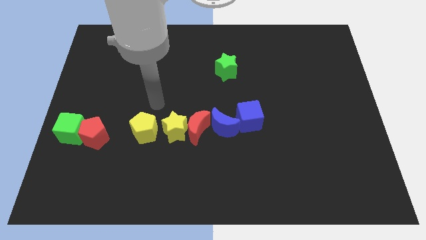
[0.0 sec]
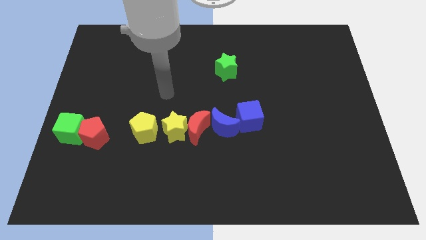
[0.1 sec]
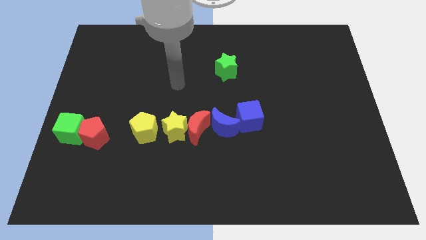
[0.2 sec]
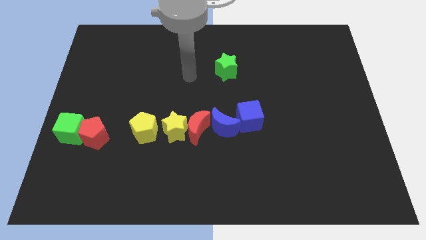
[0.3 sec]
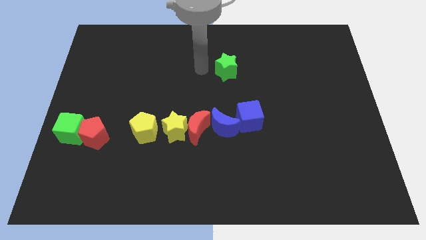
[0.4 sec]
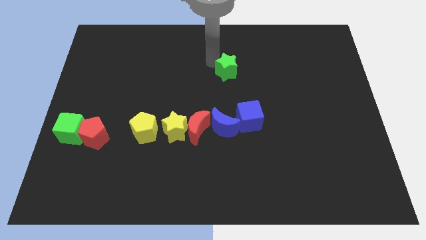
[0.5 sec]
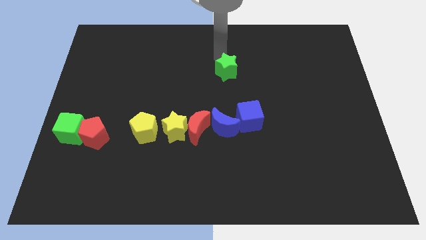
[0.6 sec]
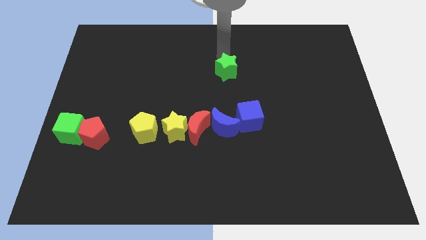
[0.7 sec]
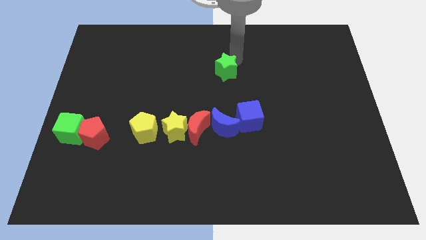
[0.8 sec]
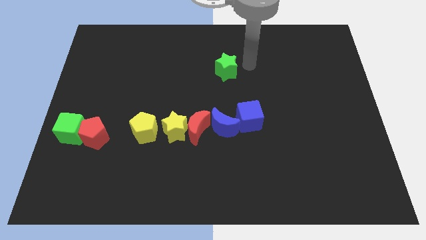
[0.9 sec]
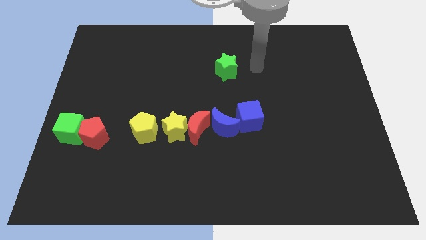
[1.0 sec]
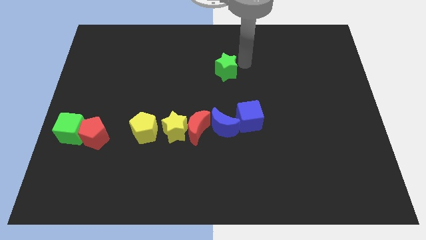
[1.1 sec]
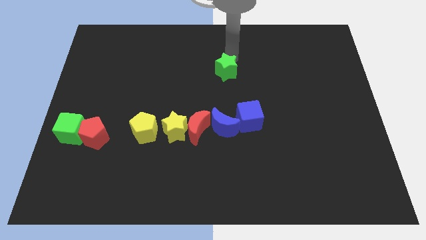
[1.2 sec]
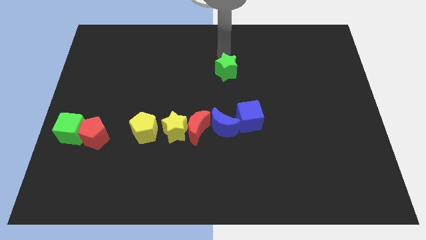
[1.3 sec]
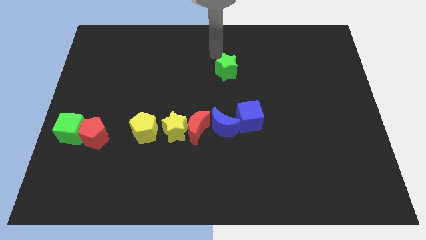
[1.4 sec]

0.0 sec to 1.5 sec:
move your arm above the green star

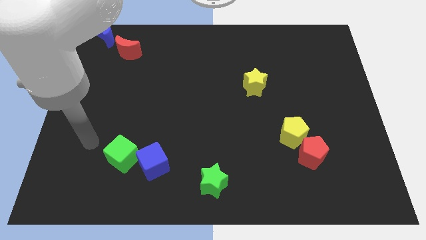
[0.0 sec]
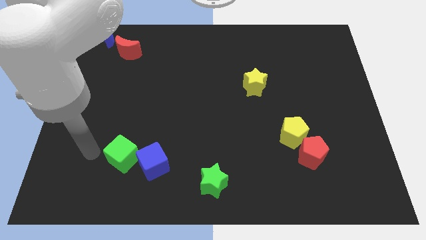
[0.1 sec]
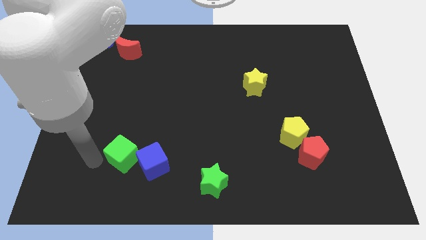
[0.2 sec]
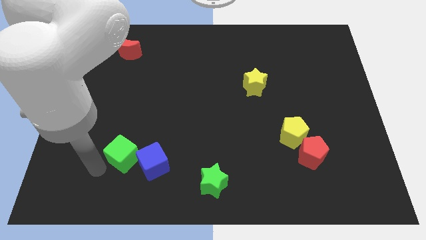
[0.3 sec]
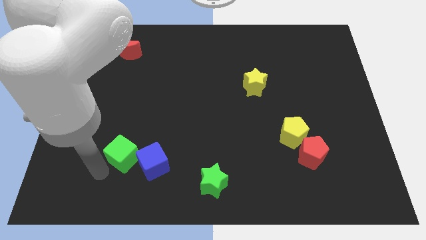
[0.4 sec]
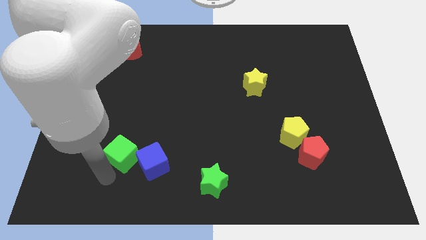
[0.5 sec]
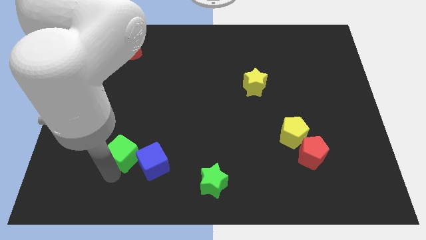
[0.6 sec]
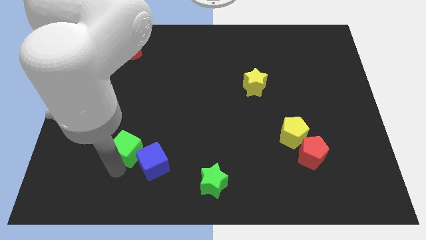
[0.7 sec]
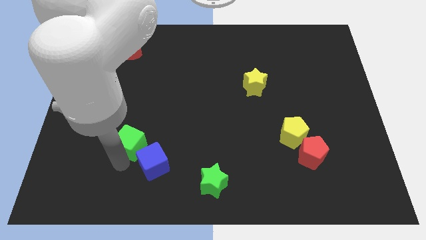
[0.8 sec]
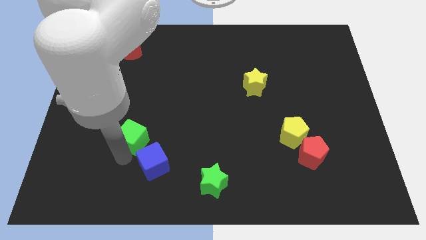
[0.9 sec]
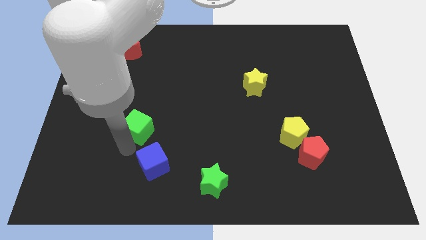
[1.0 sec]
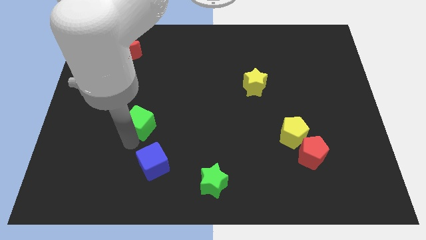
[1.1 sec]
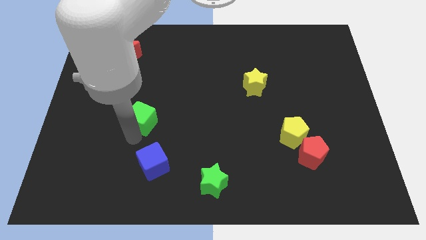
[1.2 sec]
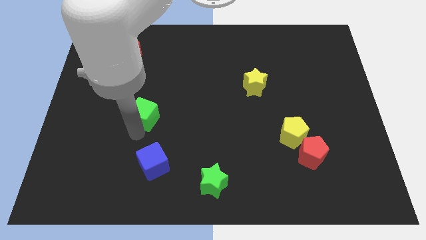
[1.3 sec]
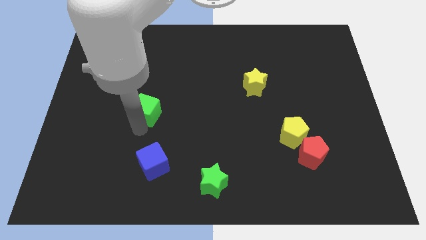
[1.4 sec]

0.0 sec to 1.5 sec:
push the green cube diagonally top left to the green star

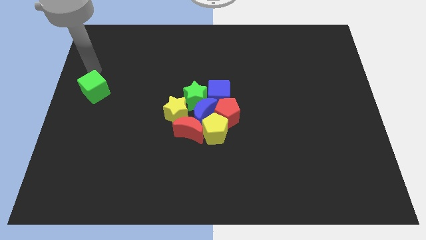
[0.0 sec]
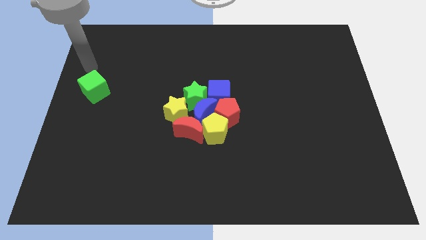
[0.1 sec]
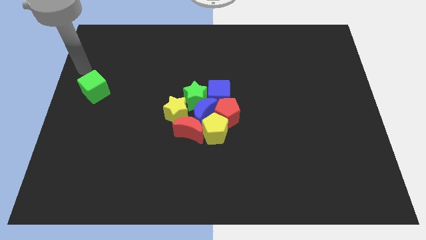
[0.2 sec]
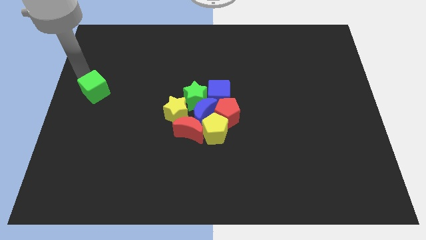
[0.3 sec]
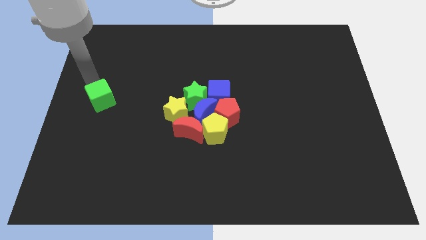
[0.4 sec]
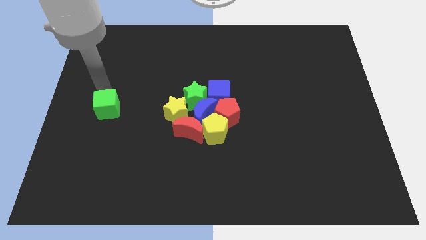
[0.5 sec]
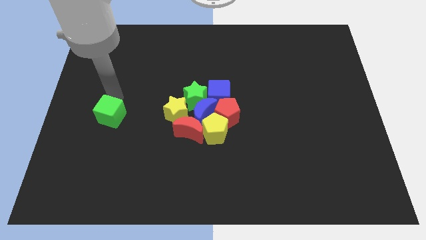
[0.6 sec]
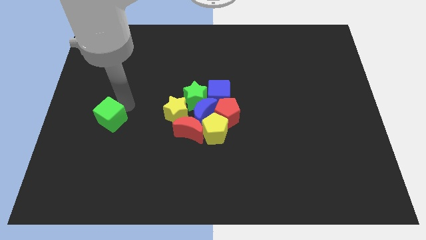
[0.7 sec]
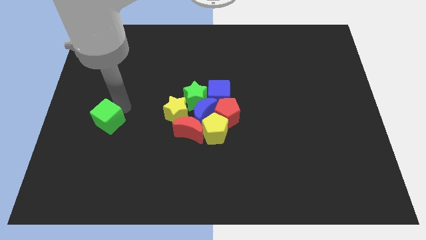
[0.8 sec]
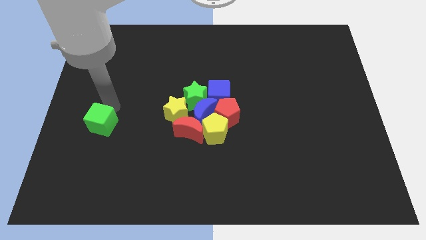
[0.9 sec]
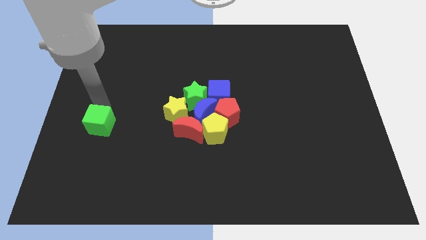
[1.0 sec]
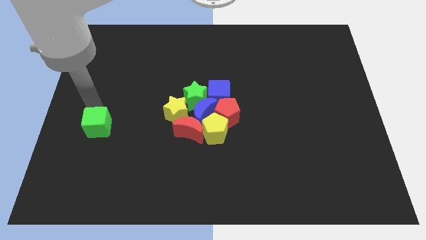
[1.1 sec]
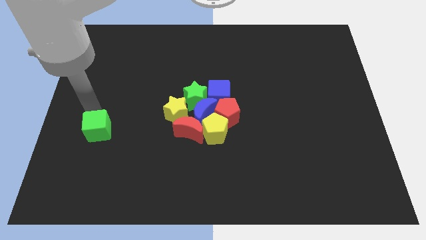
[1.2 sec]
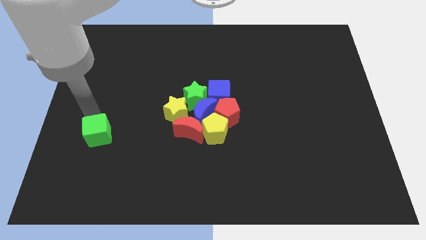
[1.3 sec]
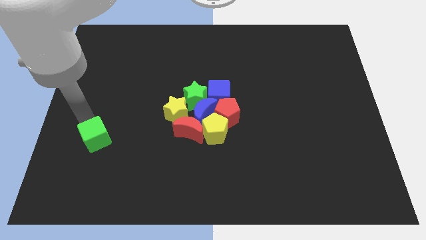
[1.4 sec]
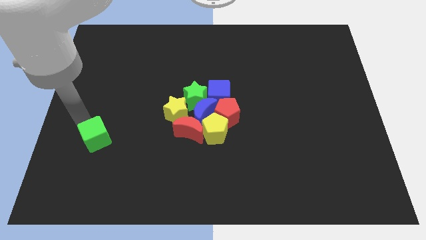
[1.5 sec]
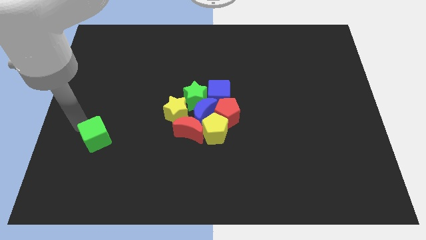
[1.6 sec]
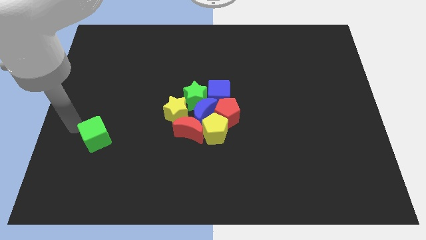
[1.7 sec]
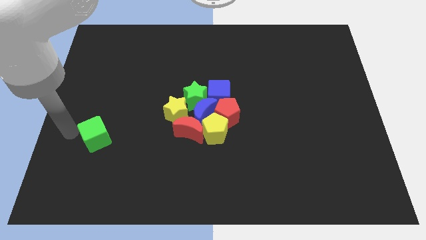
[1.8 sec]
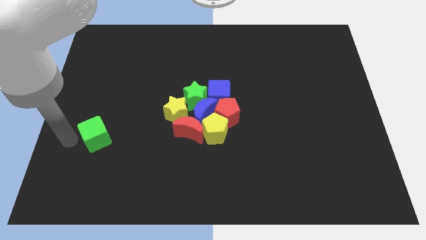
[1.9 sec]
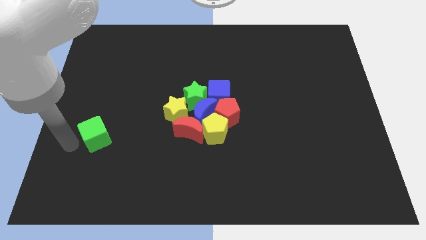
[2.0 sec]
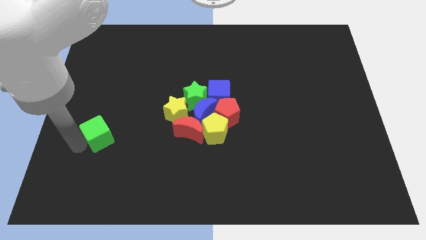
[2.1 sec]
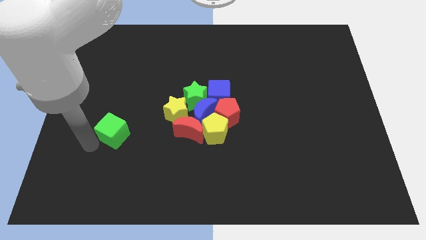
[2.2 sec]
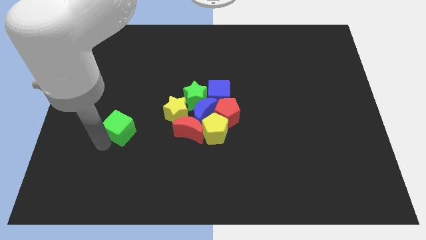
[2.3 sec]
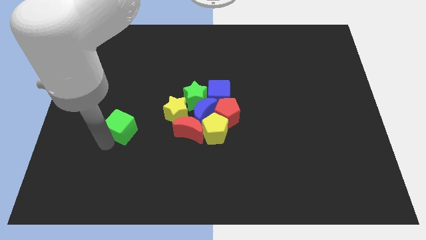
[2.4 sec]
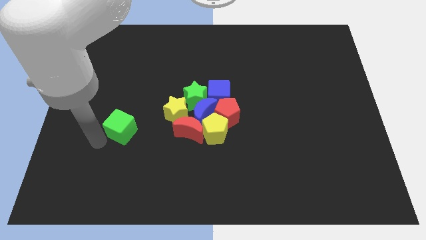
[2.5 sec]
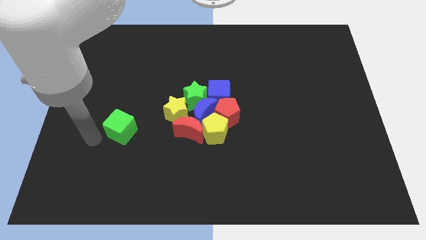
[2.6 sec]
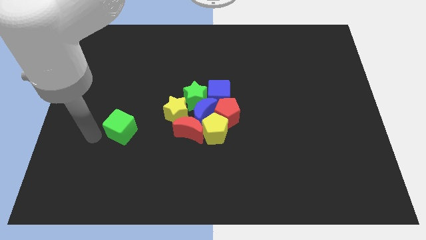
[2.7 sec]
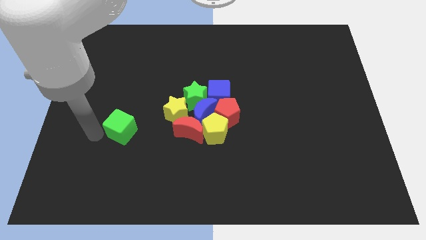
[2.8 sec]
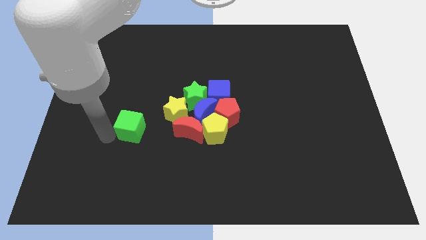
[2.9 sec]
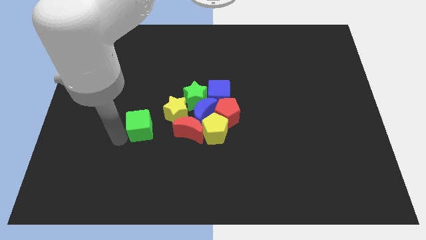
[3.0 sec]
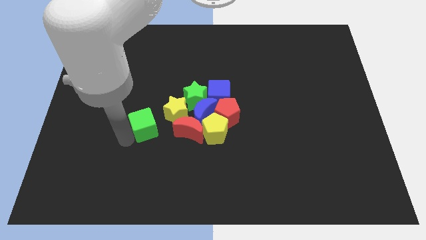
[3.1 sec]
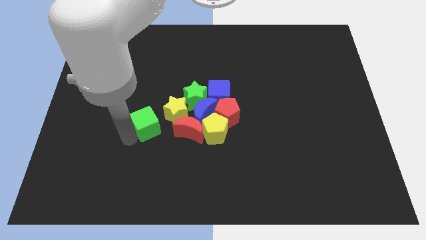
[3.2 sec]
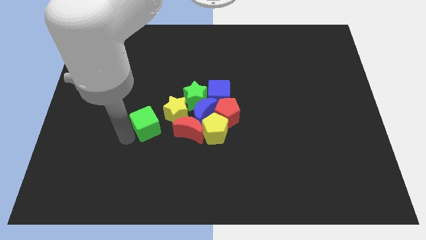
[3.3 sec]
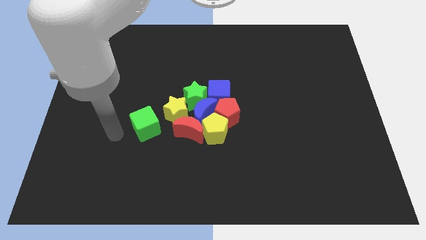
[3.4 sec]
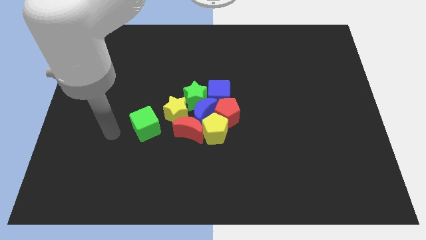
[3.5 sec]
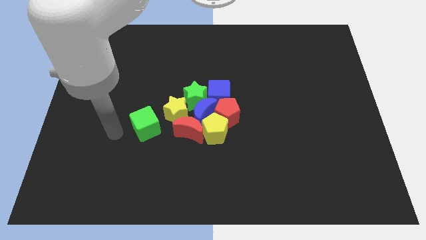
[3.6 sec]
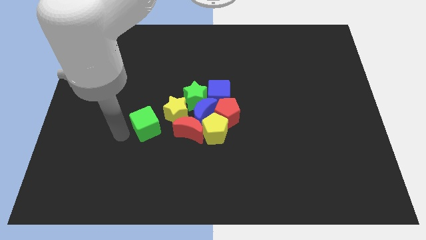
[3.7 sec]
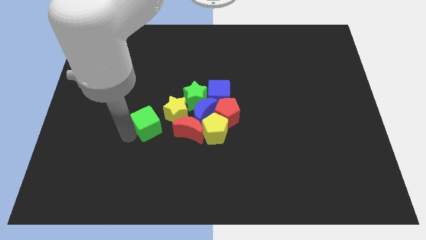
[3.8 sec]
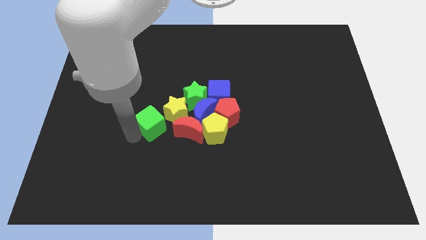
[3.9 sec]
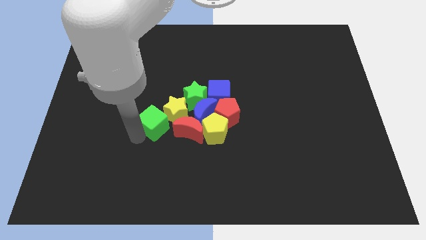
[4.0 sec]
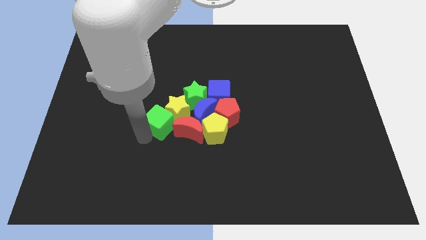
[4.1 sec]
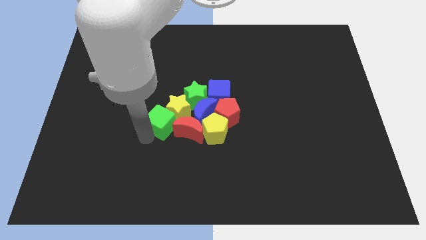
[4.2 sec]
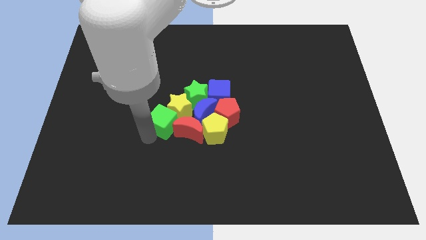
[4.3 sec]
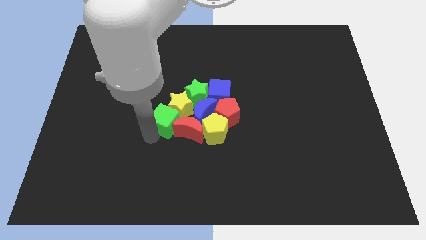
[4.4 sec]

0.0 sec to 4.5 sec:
move green cube into yellow star

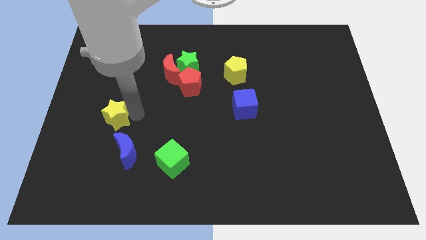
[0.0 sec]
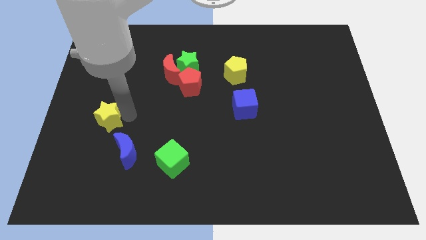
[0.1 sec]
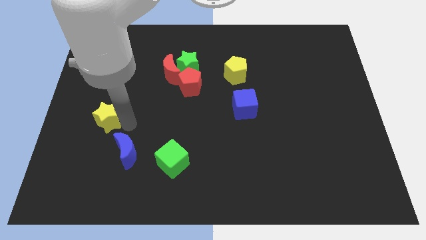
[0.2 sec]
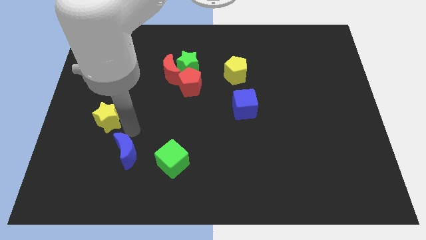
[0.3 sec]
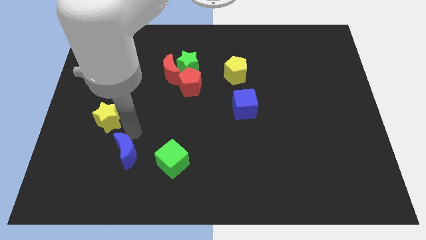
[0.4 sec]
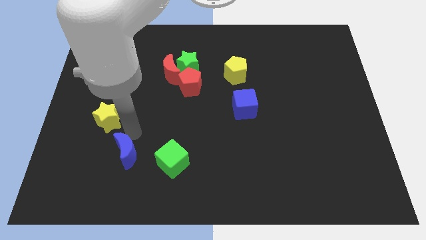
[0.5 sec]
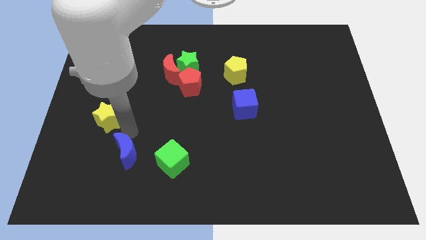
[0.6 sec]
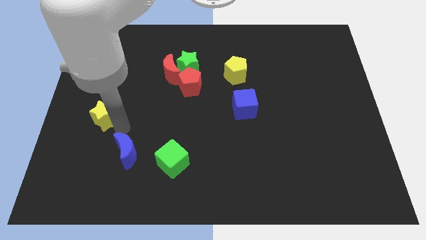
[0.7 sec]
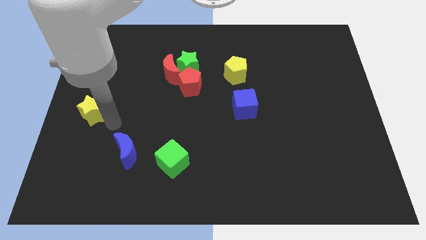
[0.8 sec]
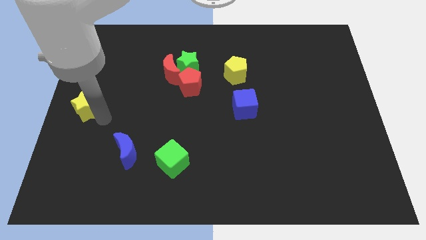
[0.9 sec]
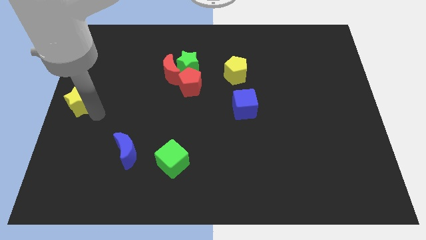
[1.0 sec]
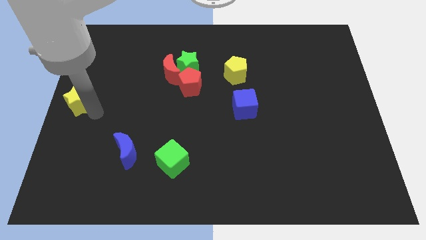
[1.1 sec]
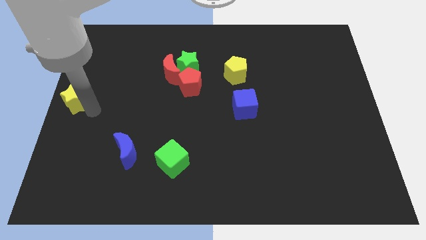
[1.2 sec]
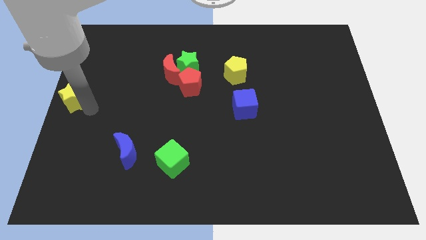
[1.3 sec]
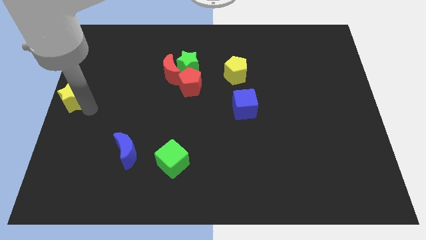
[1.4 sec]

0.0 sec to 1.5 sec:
move the yellow star left center of the board
